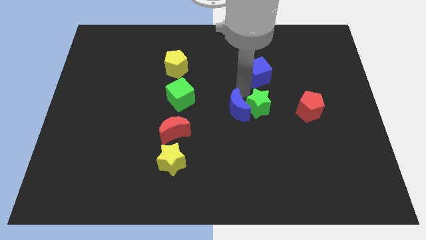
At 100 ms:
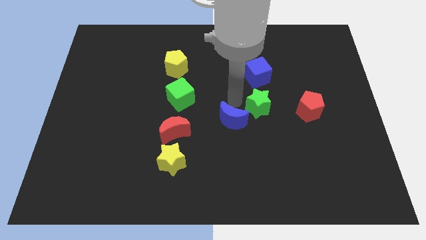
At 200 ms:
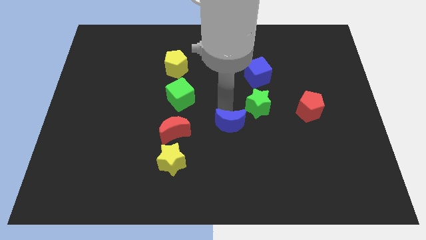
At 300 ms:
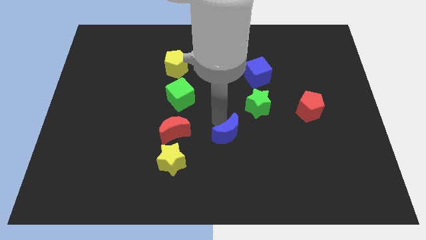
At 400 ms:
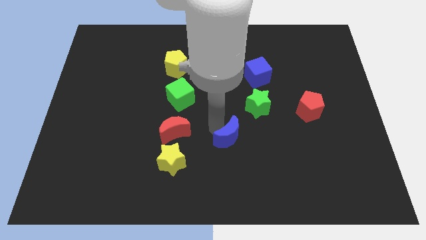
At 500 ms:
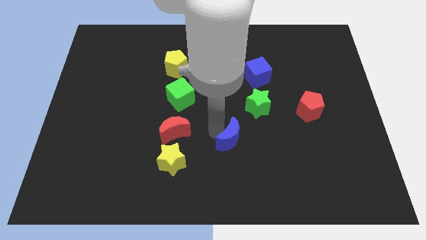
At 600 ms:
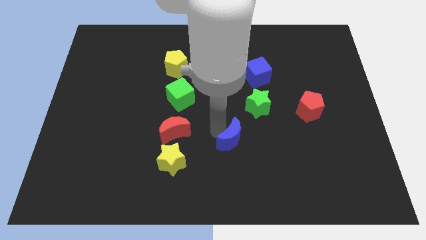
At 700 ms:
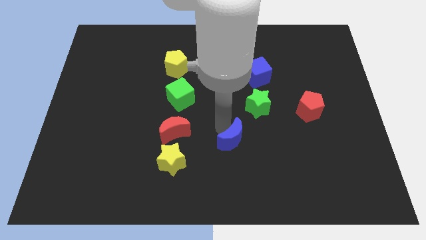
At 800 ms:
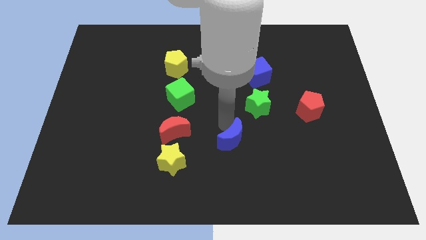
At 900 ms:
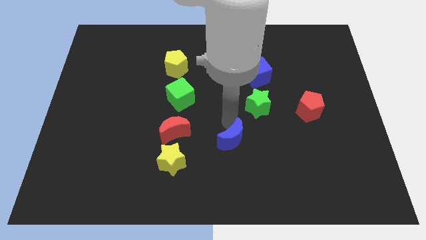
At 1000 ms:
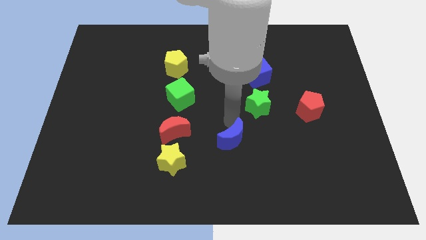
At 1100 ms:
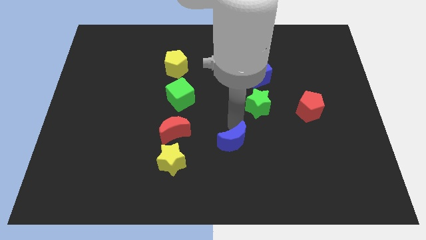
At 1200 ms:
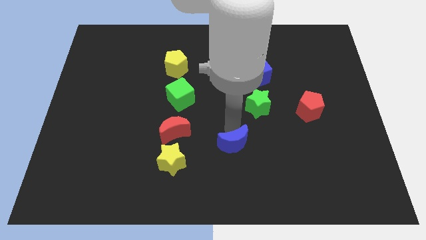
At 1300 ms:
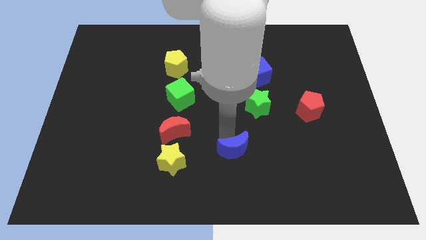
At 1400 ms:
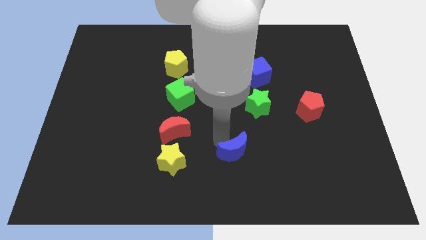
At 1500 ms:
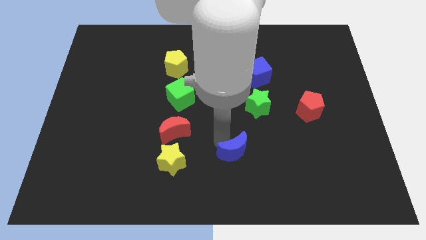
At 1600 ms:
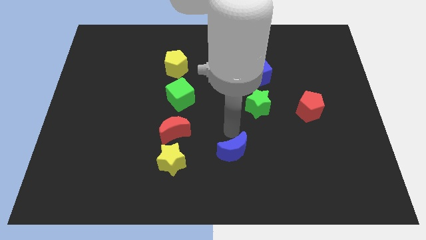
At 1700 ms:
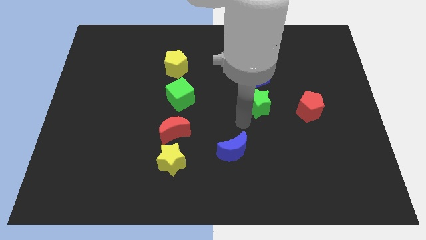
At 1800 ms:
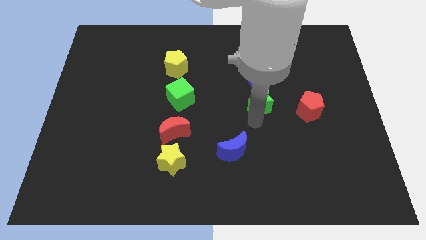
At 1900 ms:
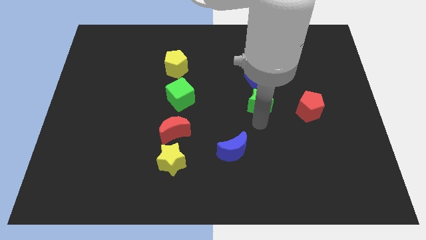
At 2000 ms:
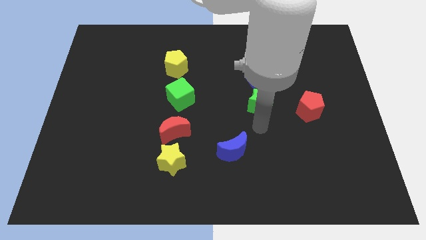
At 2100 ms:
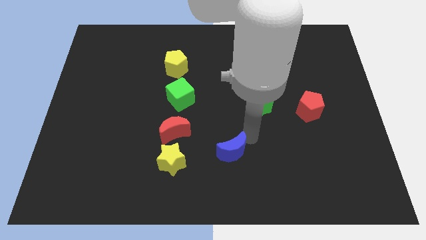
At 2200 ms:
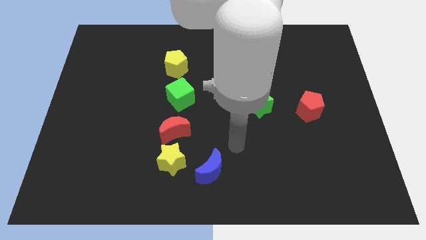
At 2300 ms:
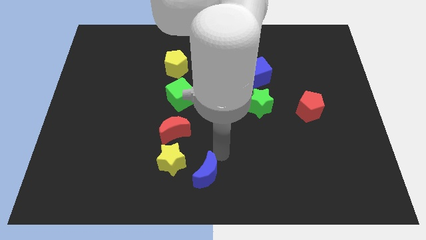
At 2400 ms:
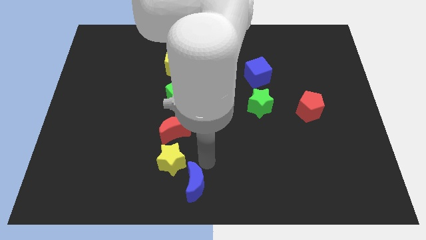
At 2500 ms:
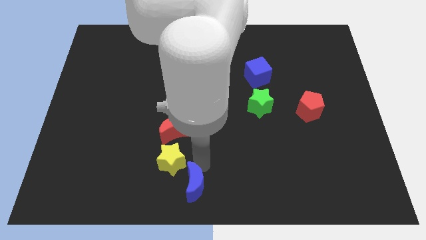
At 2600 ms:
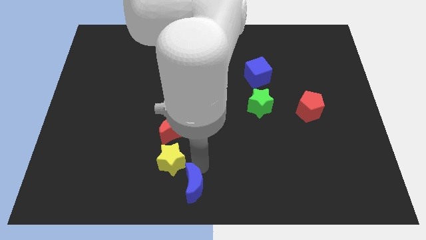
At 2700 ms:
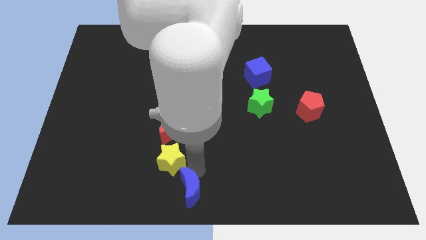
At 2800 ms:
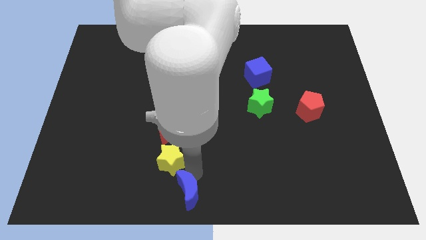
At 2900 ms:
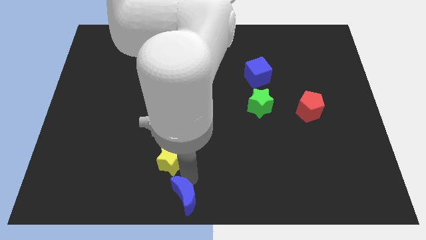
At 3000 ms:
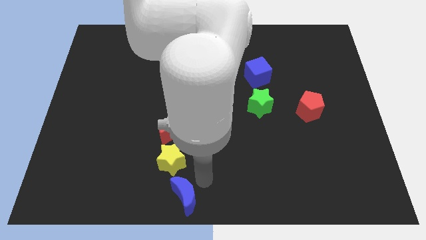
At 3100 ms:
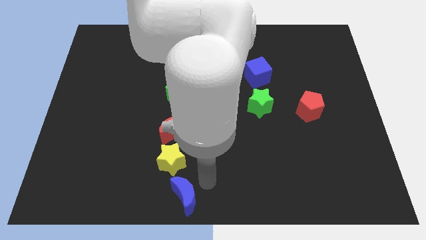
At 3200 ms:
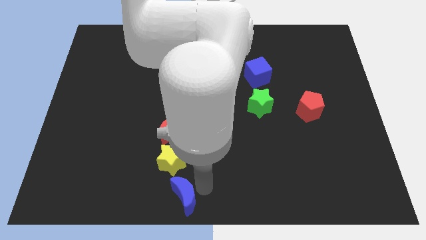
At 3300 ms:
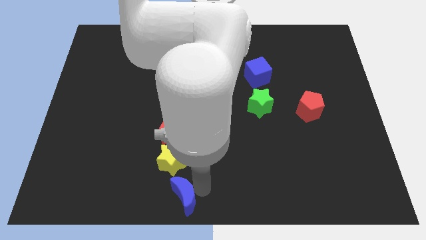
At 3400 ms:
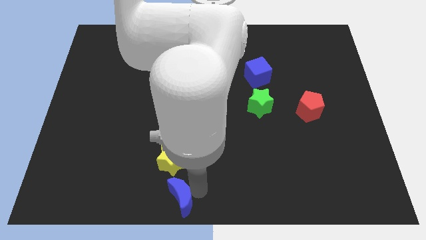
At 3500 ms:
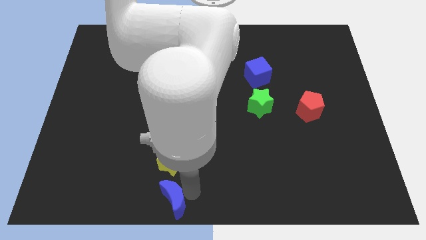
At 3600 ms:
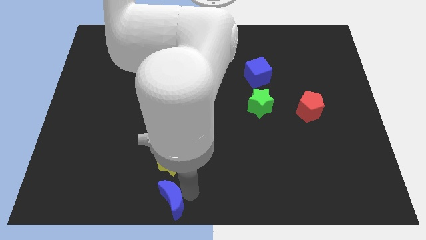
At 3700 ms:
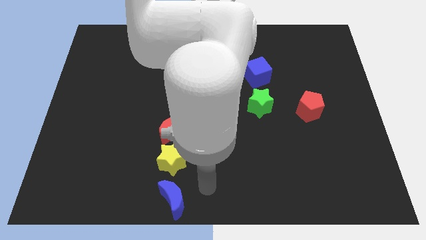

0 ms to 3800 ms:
place the blue moon at the bottom of yellow star

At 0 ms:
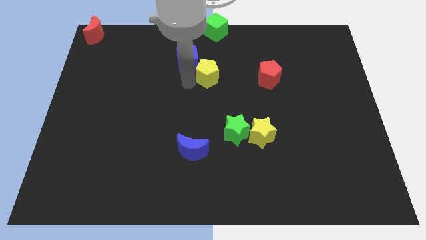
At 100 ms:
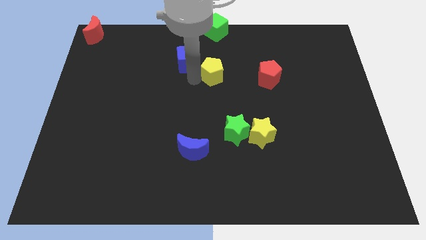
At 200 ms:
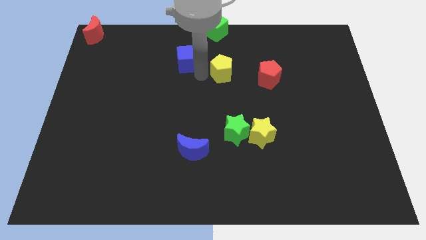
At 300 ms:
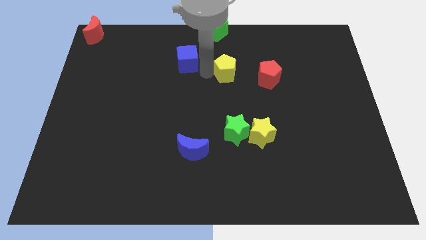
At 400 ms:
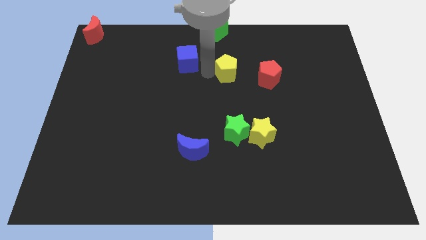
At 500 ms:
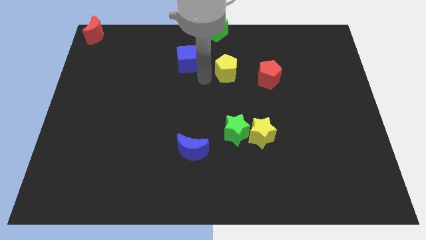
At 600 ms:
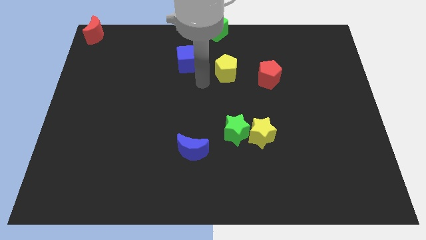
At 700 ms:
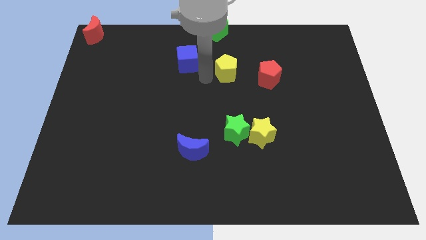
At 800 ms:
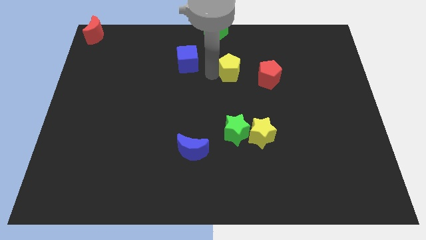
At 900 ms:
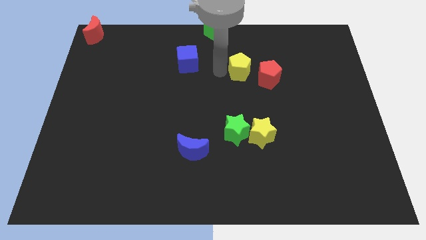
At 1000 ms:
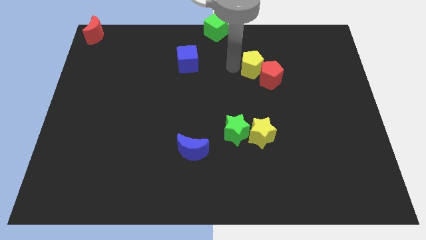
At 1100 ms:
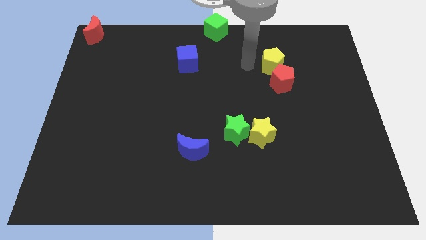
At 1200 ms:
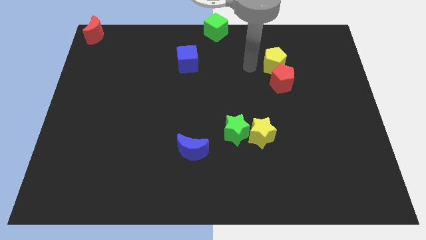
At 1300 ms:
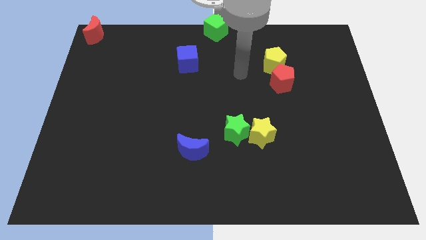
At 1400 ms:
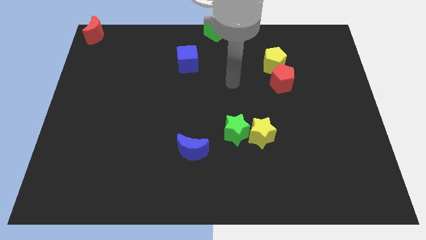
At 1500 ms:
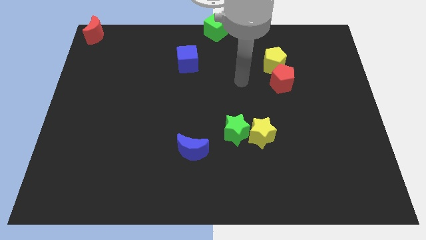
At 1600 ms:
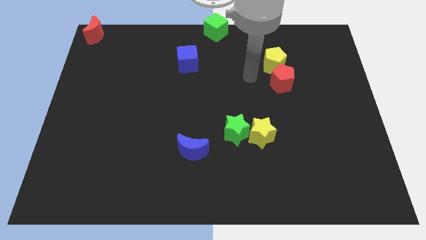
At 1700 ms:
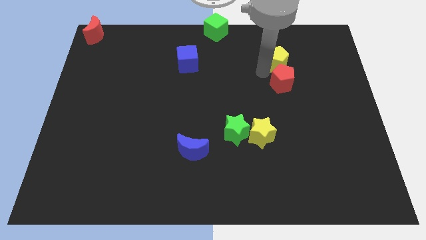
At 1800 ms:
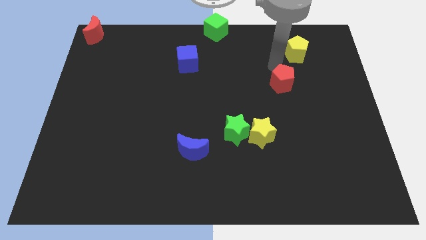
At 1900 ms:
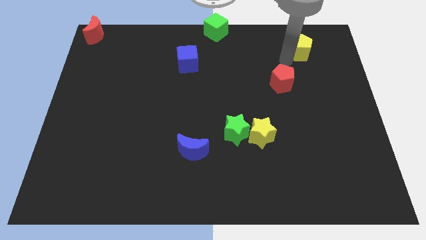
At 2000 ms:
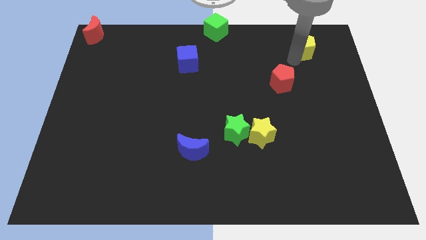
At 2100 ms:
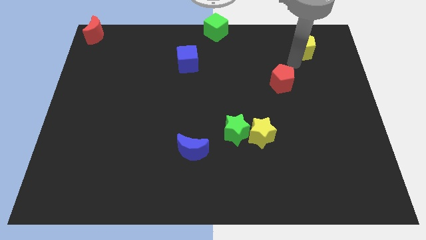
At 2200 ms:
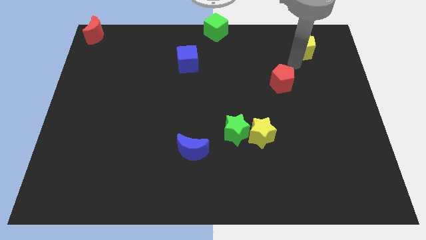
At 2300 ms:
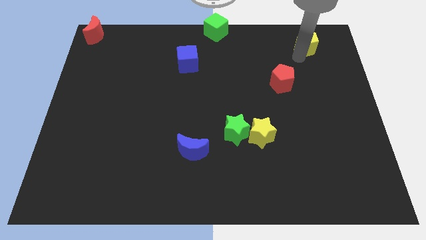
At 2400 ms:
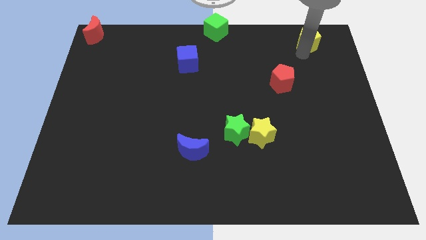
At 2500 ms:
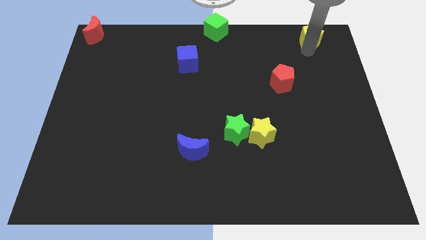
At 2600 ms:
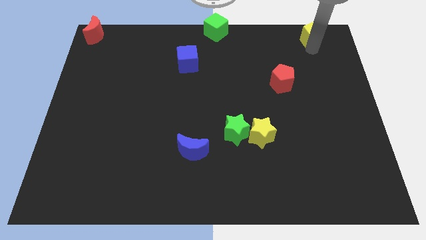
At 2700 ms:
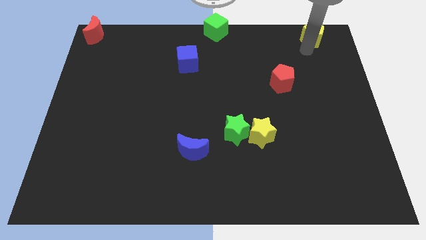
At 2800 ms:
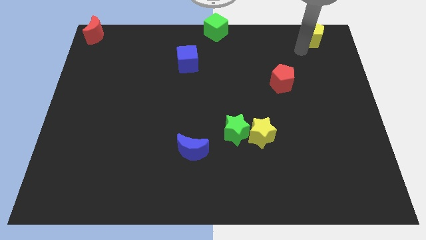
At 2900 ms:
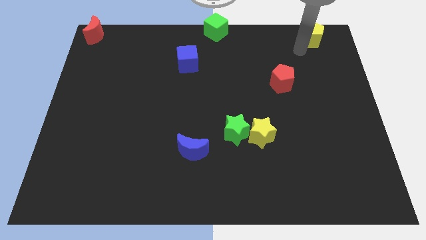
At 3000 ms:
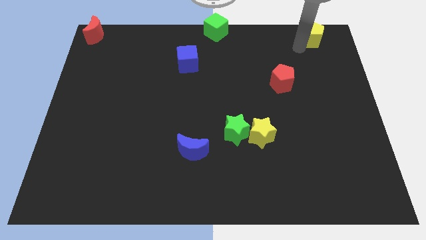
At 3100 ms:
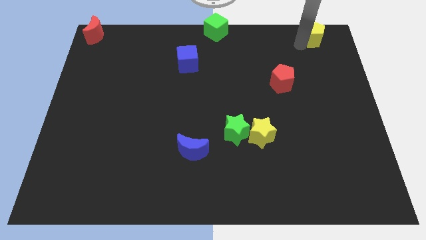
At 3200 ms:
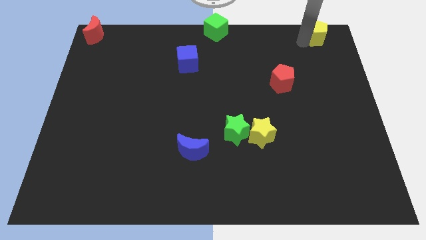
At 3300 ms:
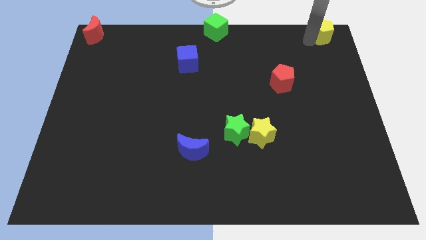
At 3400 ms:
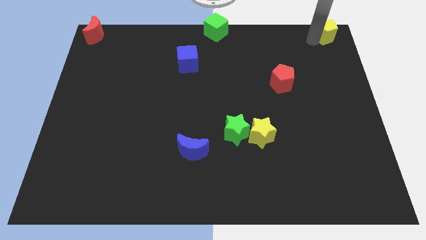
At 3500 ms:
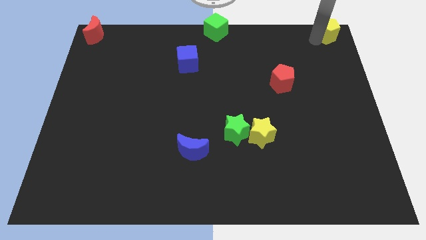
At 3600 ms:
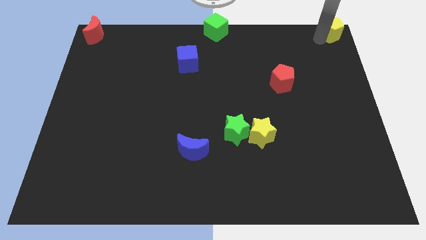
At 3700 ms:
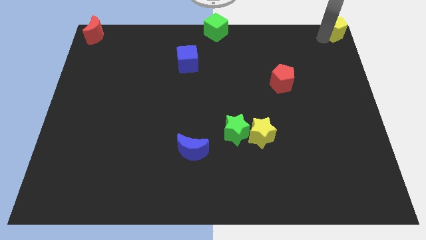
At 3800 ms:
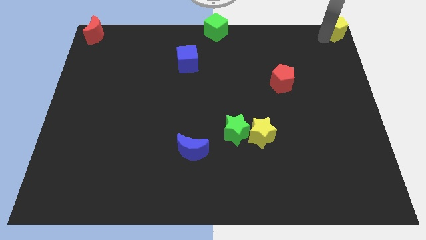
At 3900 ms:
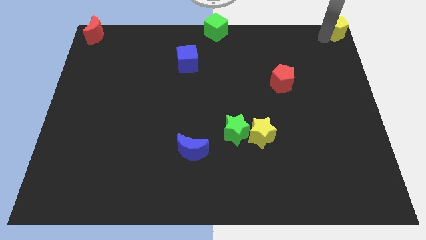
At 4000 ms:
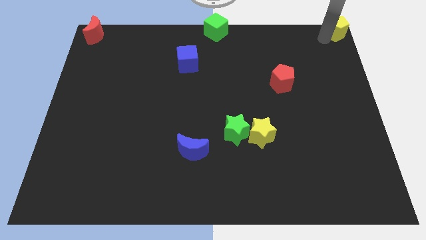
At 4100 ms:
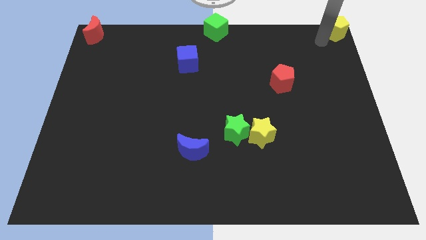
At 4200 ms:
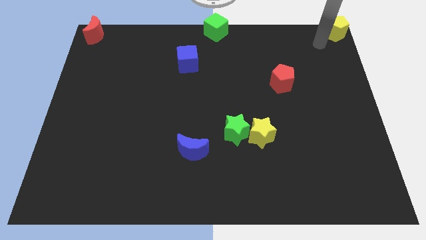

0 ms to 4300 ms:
push the yellow pentagon to the top right corner of the board

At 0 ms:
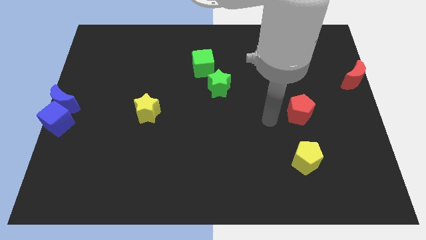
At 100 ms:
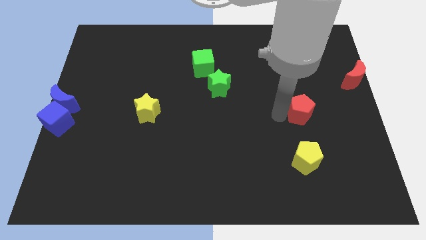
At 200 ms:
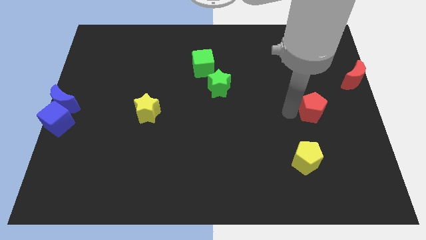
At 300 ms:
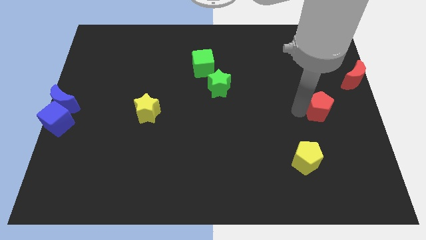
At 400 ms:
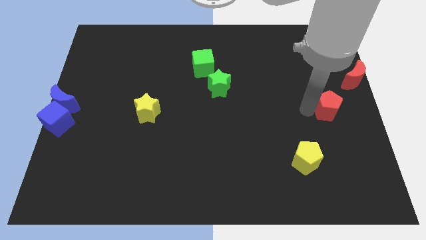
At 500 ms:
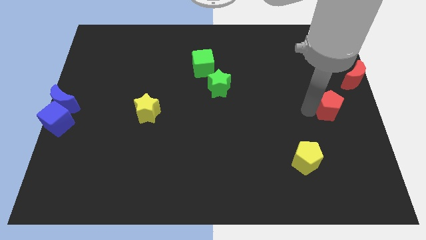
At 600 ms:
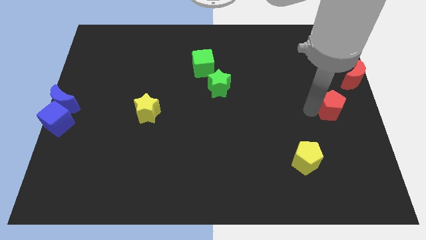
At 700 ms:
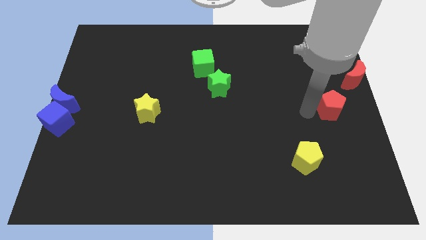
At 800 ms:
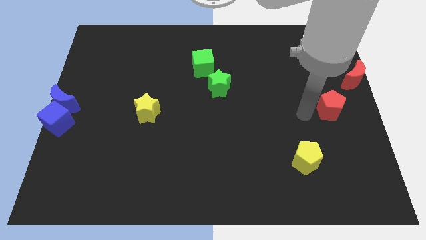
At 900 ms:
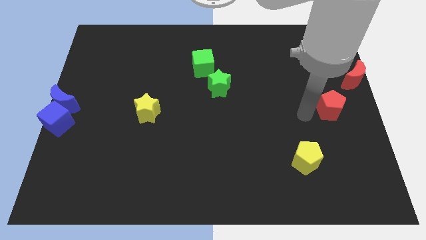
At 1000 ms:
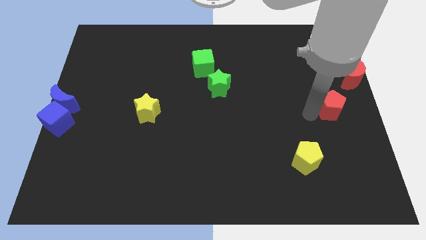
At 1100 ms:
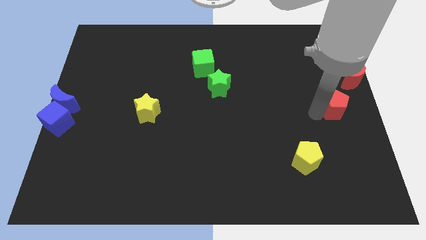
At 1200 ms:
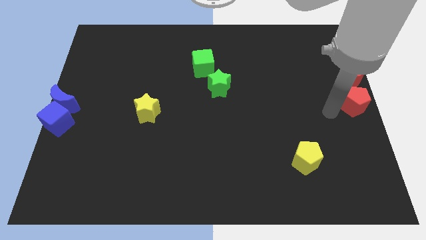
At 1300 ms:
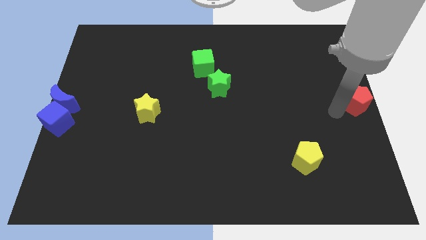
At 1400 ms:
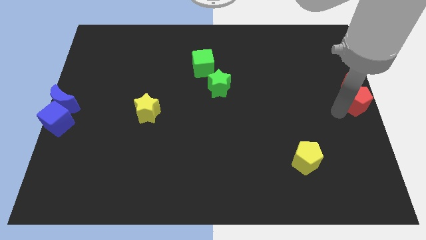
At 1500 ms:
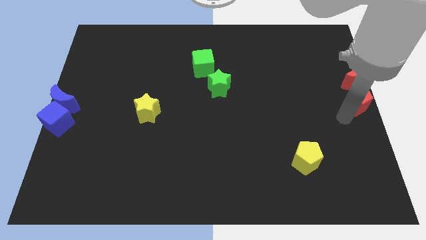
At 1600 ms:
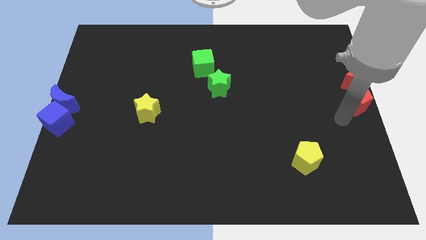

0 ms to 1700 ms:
push the red pentagon below to the red moon
